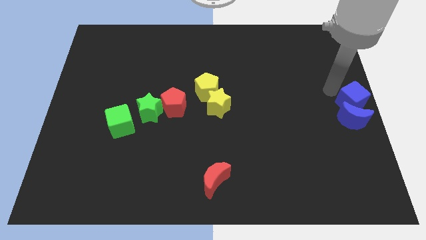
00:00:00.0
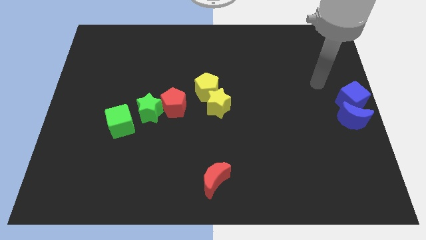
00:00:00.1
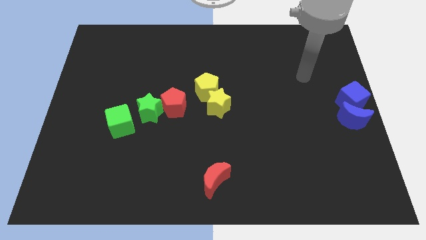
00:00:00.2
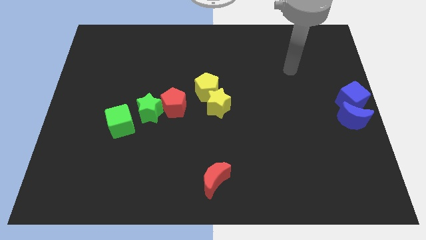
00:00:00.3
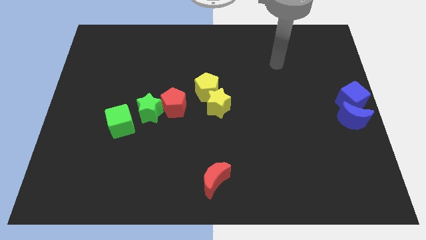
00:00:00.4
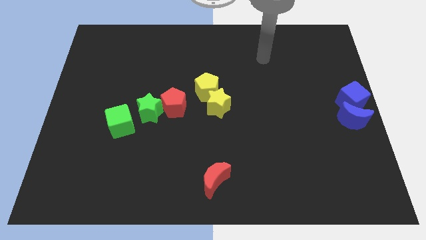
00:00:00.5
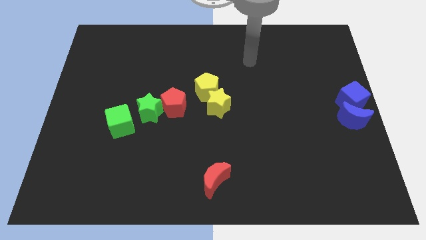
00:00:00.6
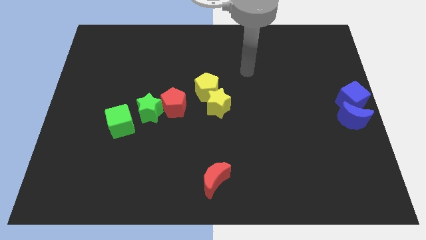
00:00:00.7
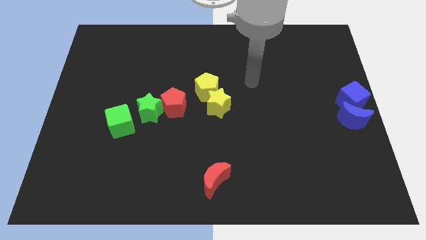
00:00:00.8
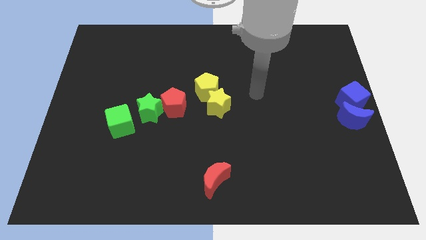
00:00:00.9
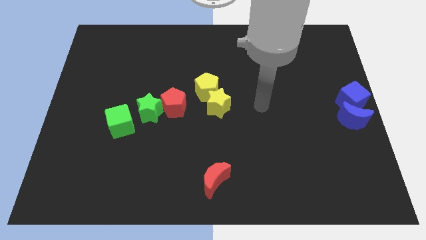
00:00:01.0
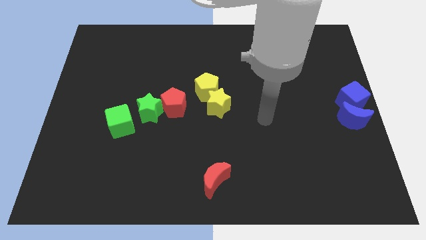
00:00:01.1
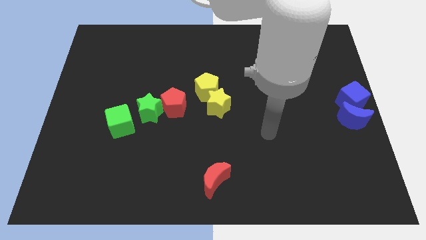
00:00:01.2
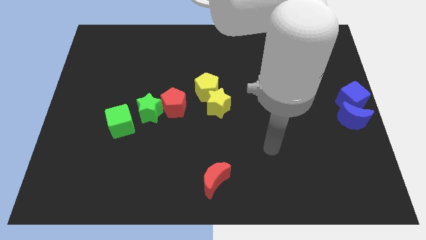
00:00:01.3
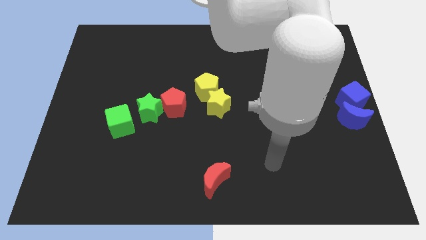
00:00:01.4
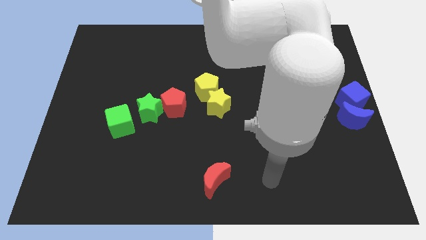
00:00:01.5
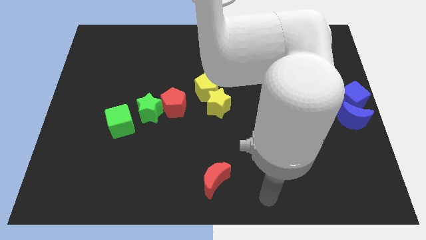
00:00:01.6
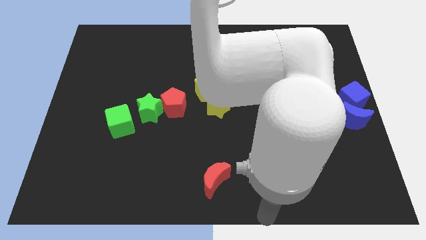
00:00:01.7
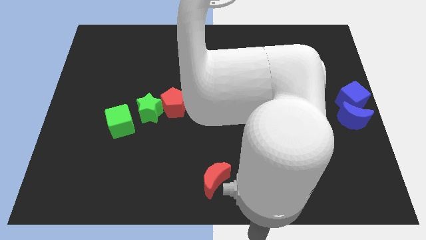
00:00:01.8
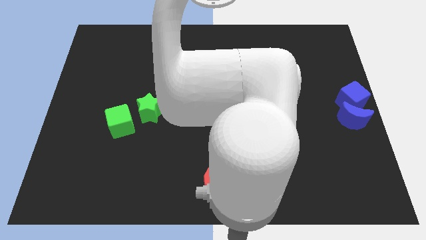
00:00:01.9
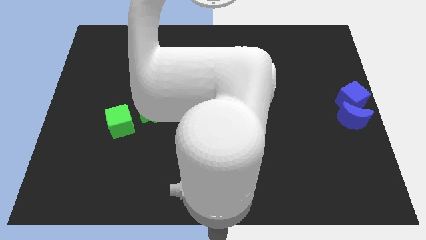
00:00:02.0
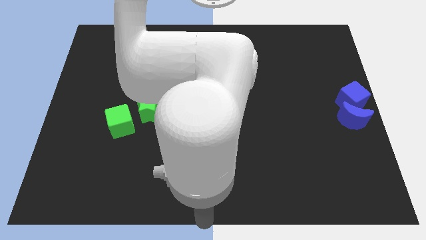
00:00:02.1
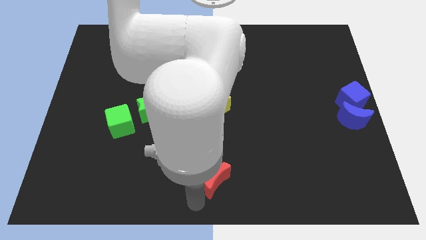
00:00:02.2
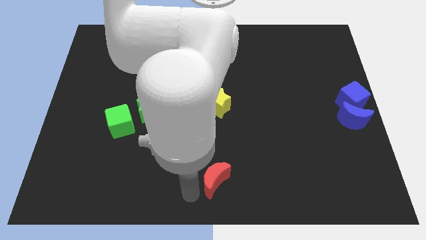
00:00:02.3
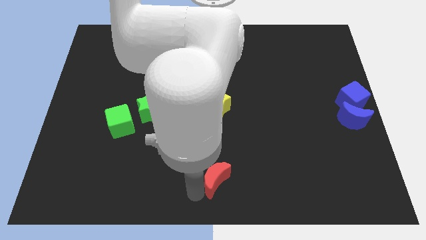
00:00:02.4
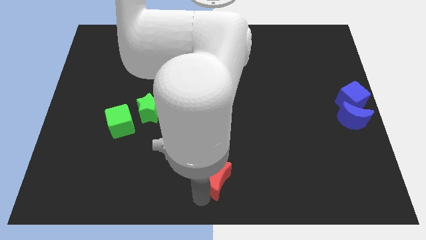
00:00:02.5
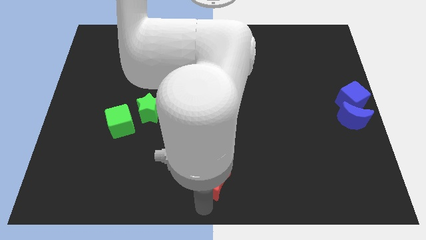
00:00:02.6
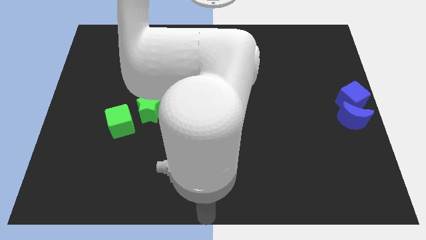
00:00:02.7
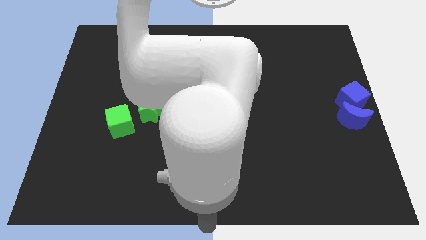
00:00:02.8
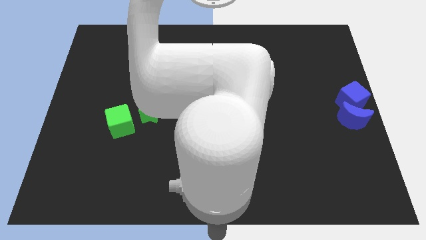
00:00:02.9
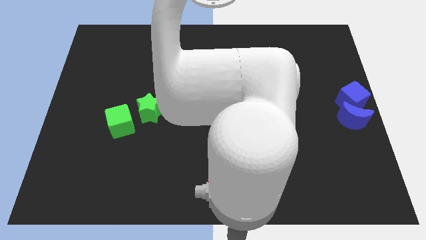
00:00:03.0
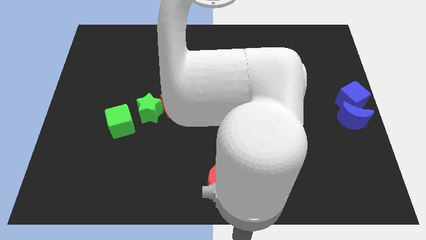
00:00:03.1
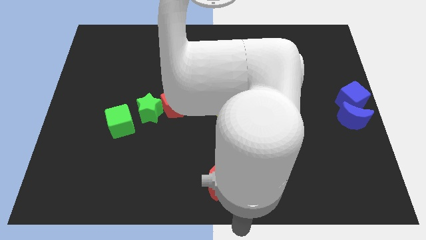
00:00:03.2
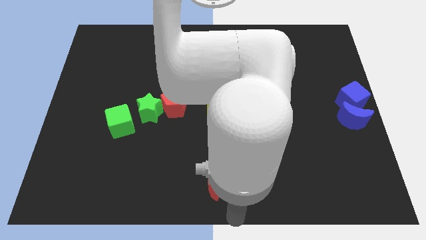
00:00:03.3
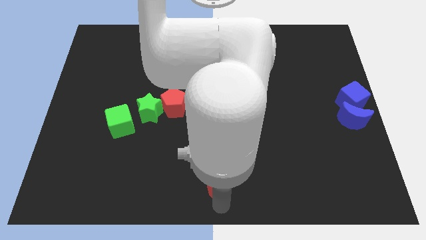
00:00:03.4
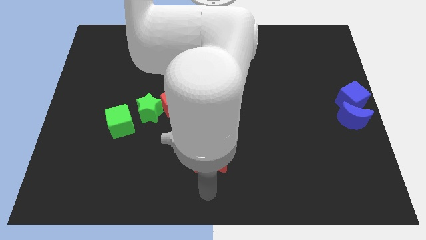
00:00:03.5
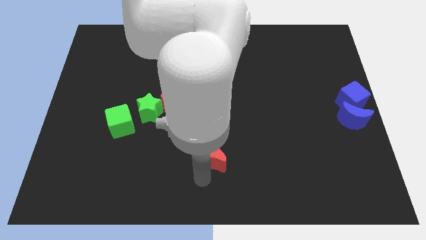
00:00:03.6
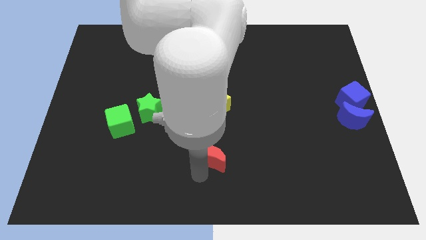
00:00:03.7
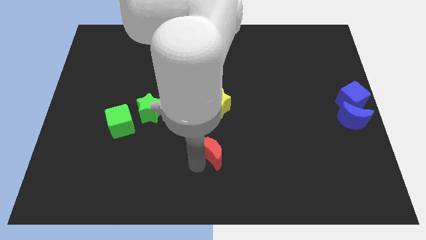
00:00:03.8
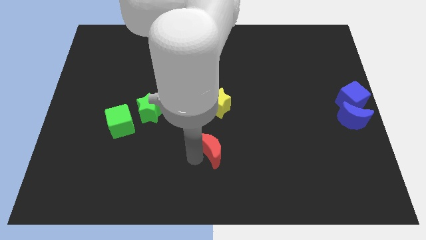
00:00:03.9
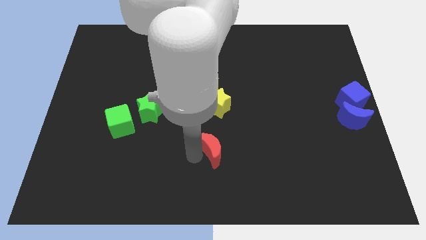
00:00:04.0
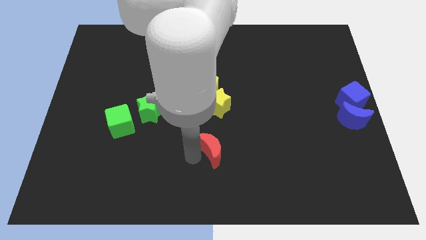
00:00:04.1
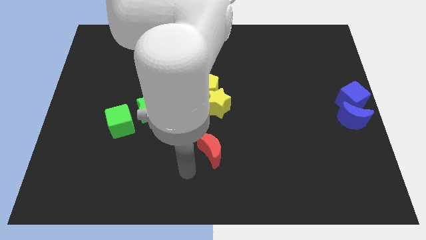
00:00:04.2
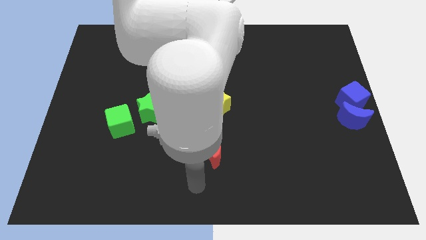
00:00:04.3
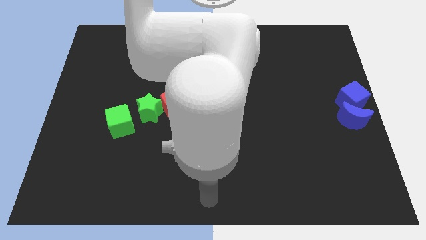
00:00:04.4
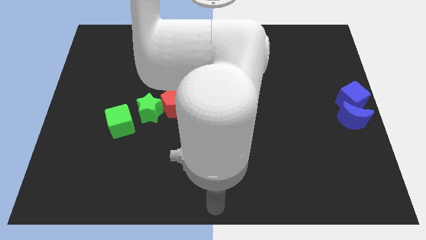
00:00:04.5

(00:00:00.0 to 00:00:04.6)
slide the red moon towards the center of the board

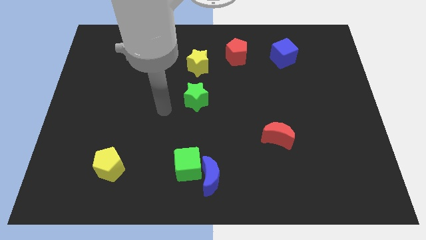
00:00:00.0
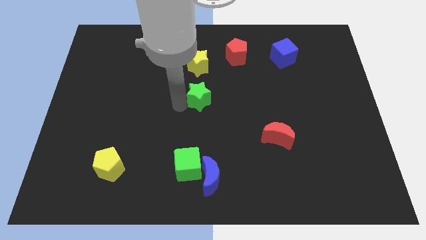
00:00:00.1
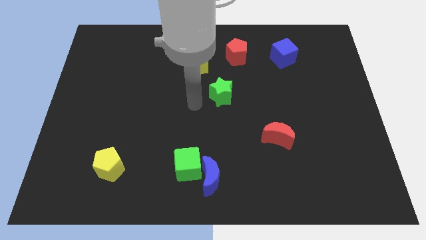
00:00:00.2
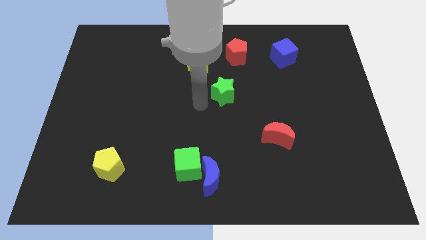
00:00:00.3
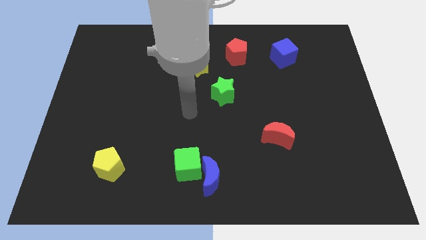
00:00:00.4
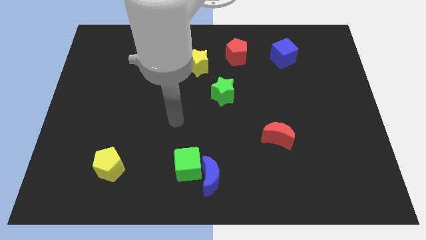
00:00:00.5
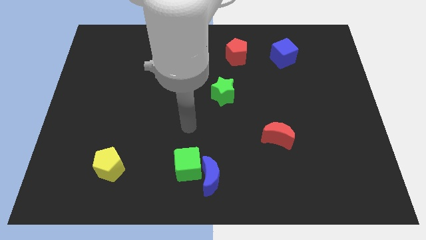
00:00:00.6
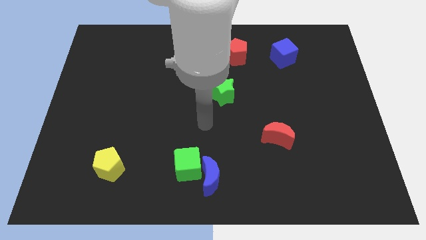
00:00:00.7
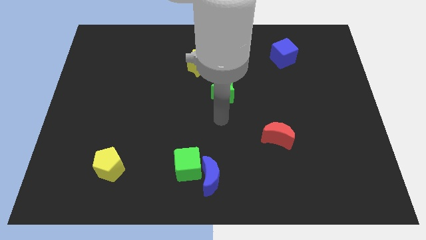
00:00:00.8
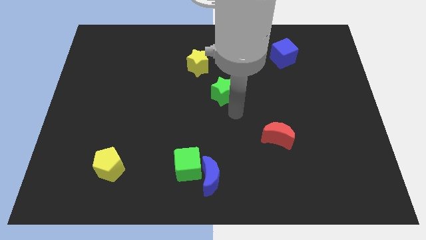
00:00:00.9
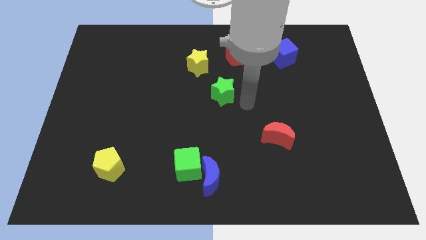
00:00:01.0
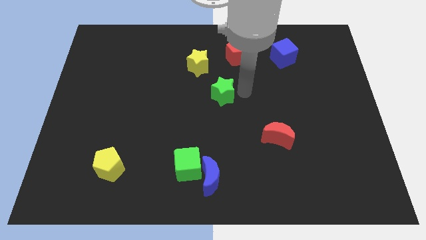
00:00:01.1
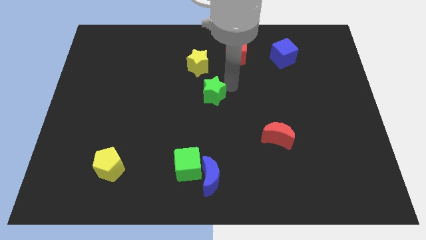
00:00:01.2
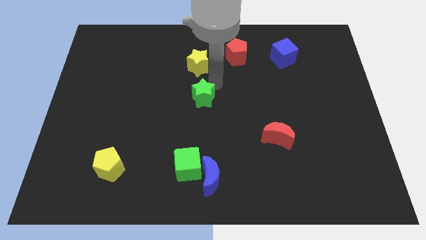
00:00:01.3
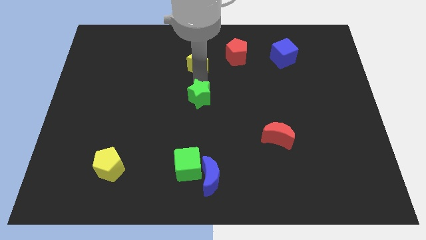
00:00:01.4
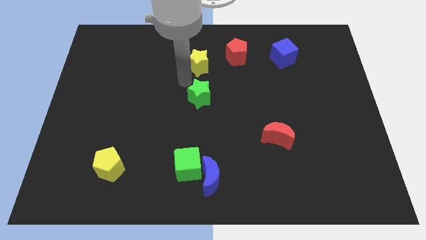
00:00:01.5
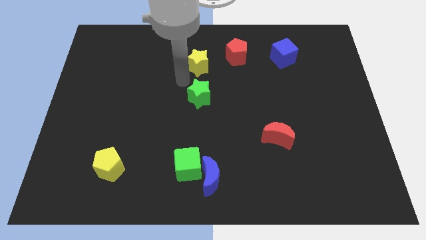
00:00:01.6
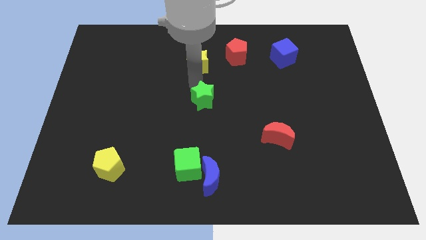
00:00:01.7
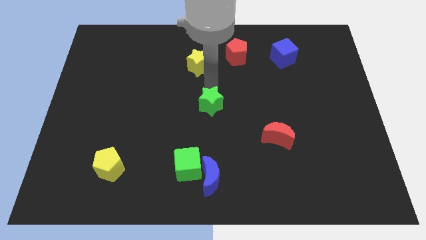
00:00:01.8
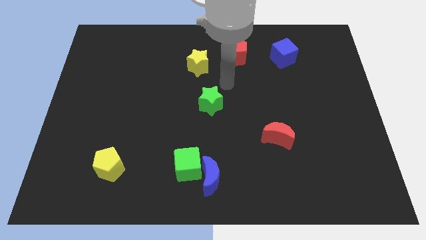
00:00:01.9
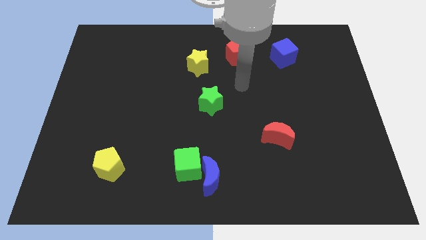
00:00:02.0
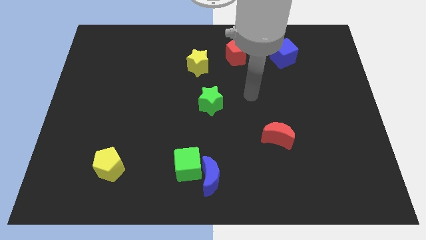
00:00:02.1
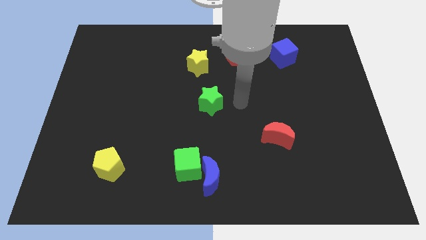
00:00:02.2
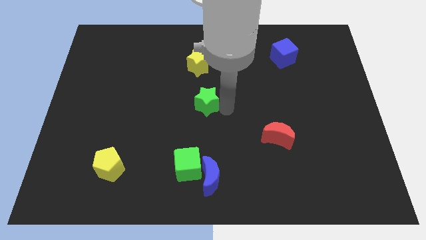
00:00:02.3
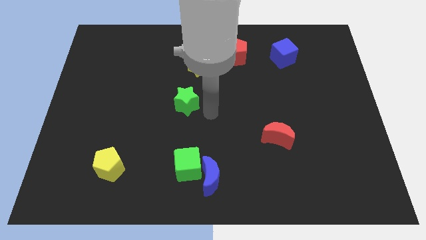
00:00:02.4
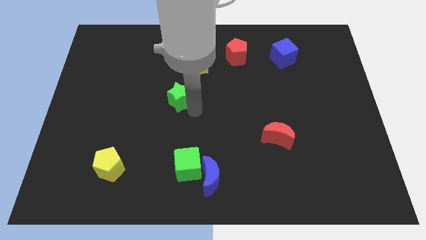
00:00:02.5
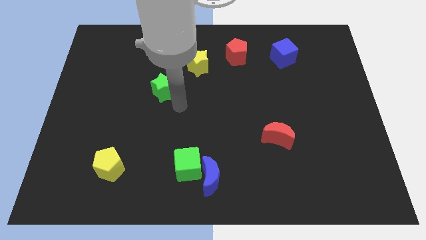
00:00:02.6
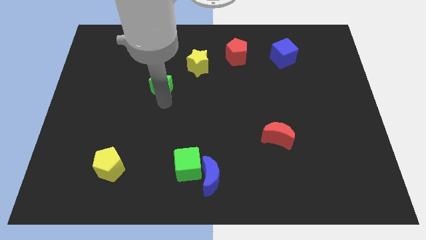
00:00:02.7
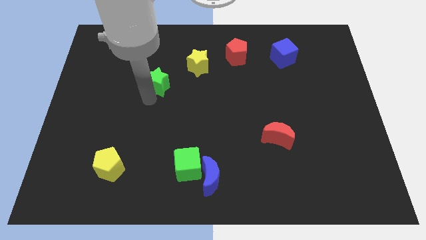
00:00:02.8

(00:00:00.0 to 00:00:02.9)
push the green star diagonally left above red crescent

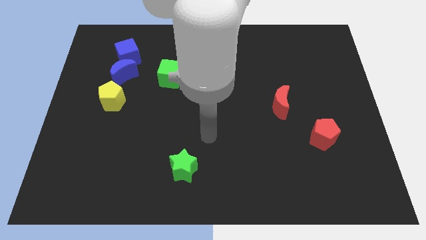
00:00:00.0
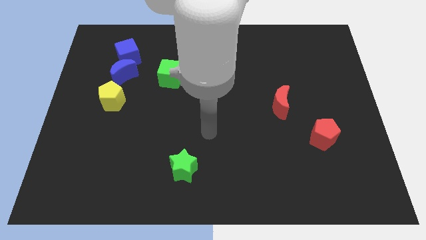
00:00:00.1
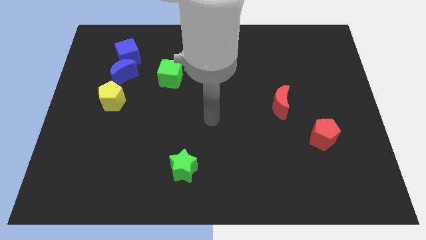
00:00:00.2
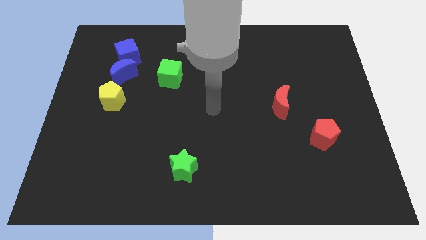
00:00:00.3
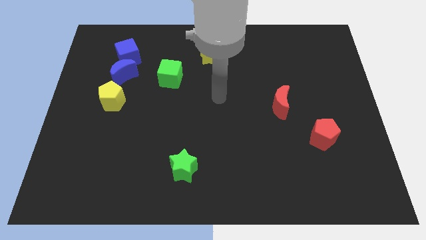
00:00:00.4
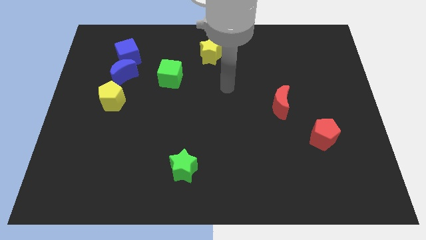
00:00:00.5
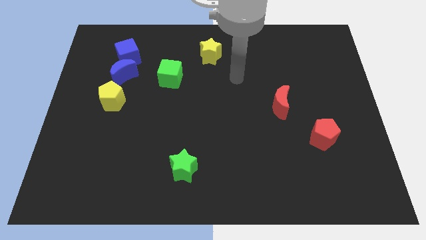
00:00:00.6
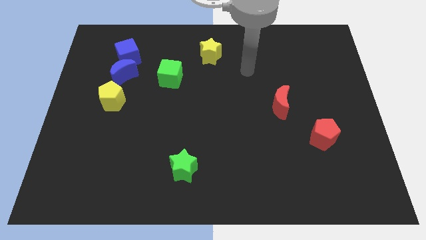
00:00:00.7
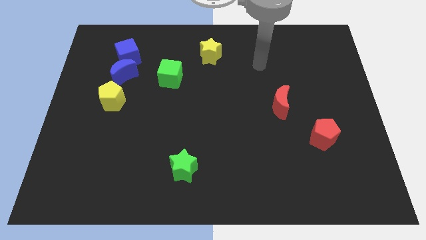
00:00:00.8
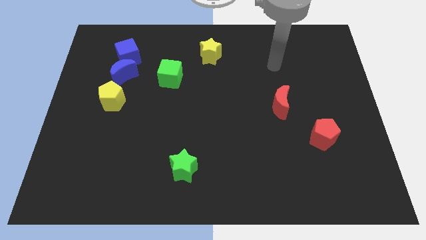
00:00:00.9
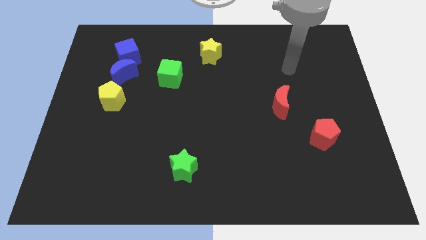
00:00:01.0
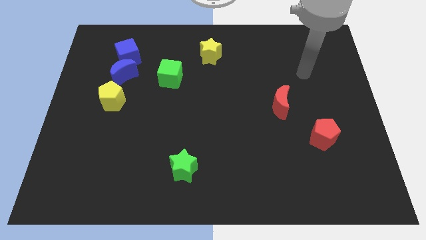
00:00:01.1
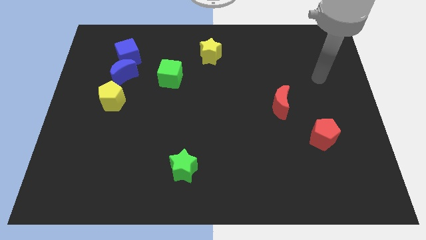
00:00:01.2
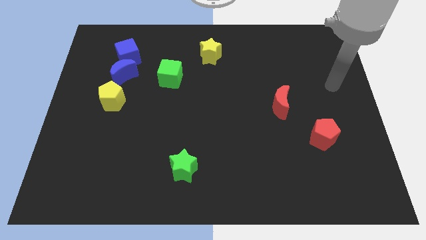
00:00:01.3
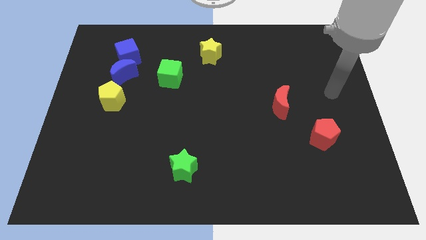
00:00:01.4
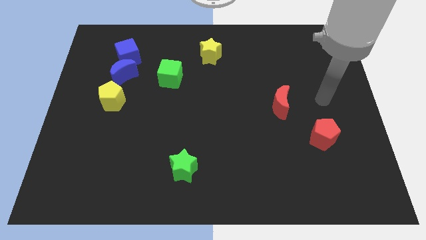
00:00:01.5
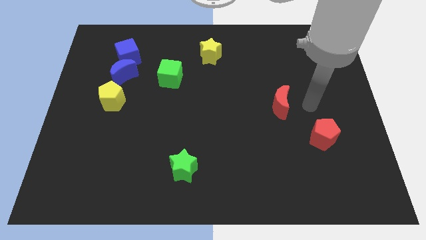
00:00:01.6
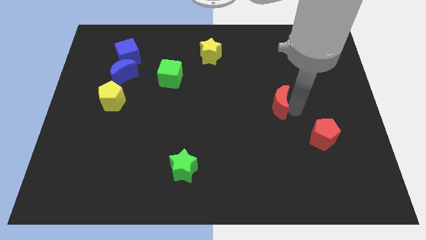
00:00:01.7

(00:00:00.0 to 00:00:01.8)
move your arm towards the red crescent
